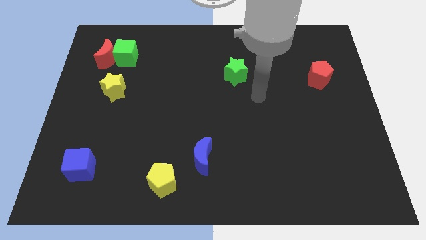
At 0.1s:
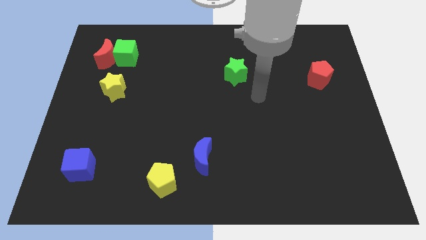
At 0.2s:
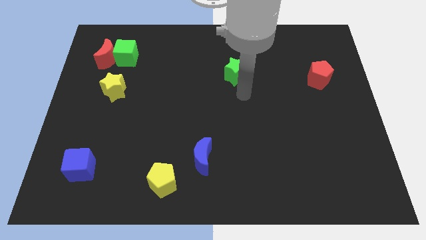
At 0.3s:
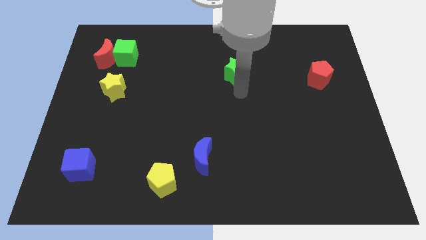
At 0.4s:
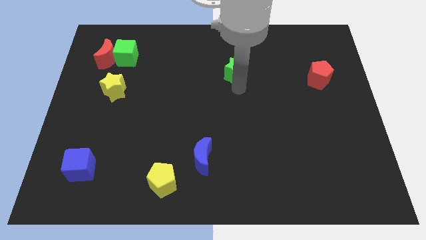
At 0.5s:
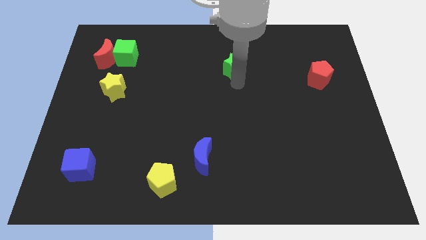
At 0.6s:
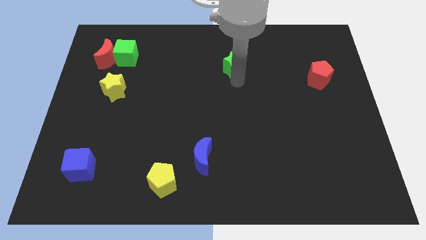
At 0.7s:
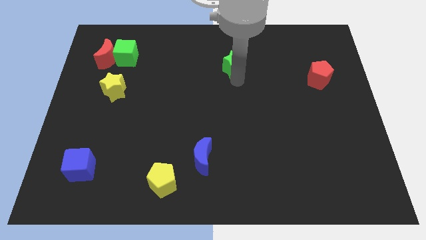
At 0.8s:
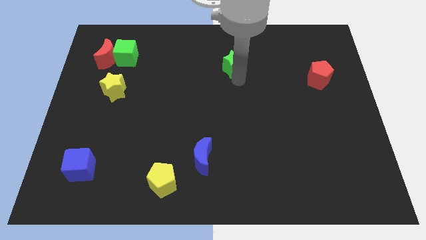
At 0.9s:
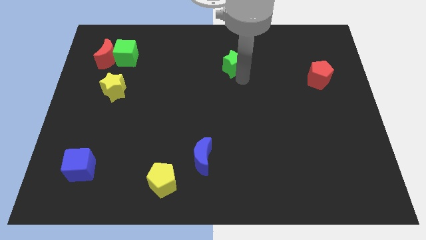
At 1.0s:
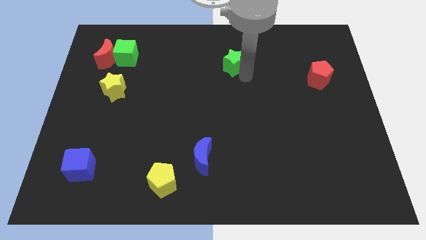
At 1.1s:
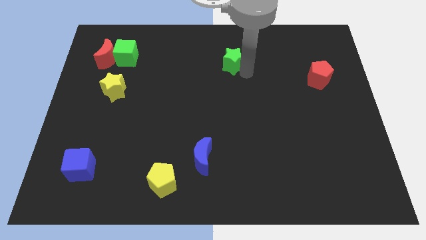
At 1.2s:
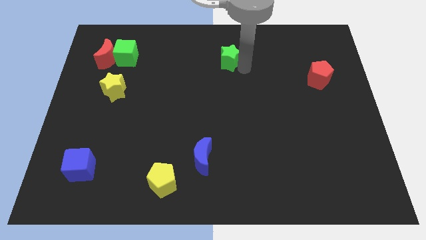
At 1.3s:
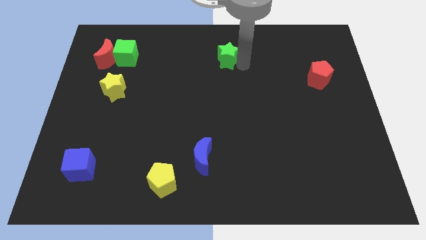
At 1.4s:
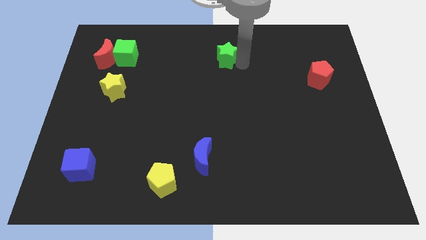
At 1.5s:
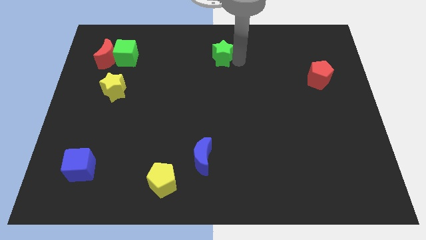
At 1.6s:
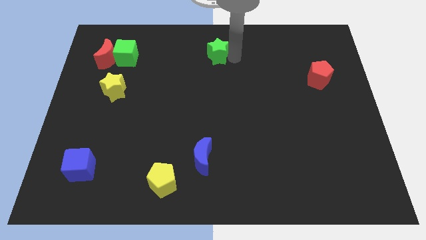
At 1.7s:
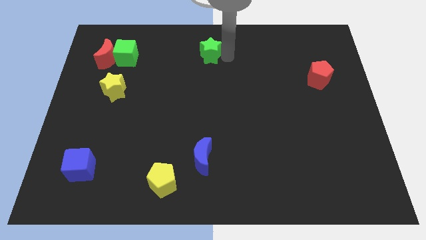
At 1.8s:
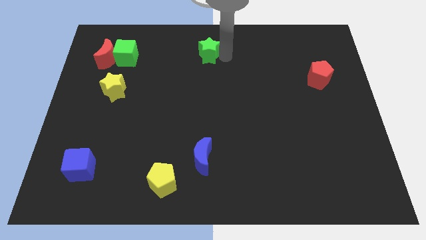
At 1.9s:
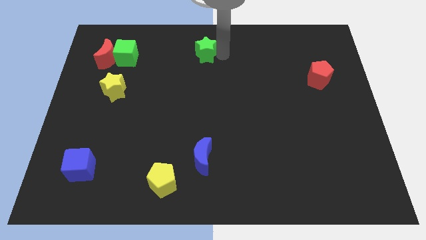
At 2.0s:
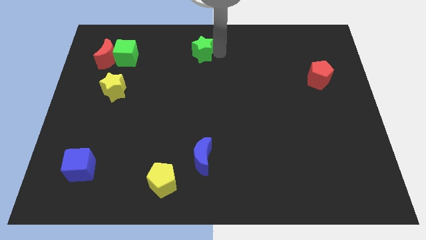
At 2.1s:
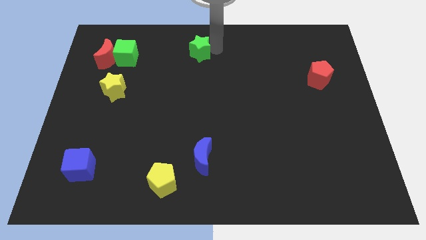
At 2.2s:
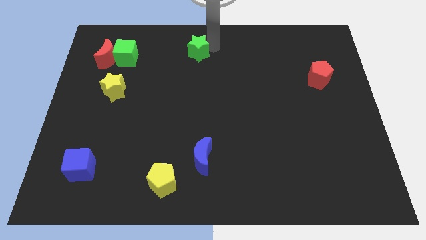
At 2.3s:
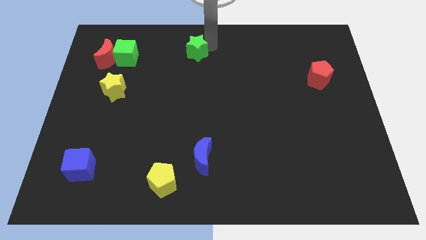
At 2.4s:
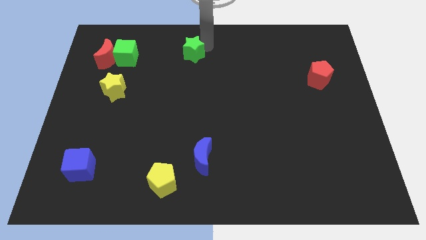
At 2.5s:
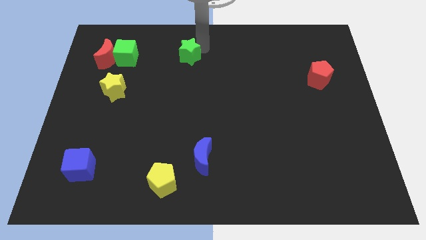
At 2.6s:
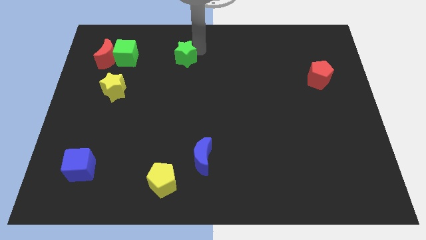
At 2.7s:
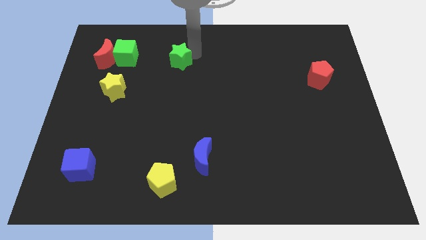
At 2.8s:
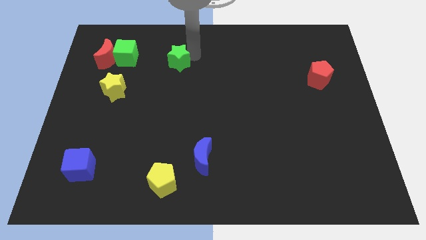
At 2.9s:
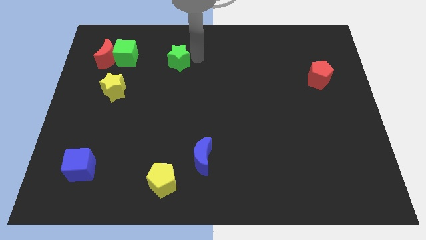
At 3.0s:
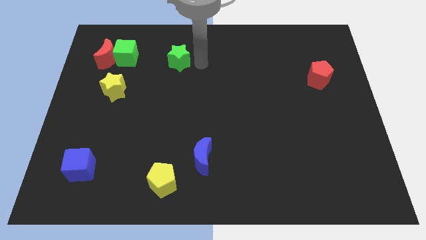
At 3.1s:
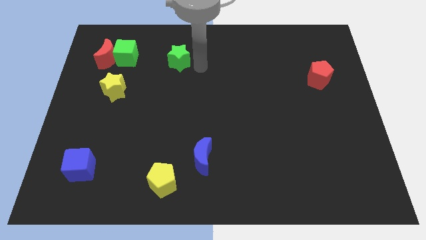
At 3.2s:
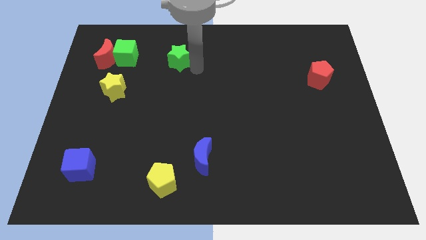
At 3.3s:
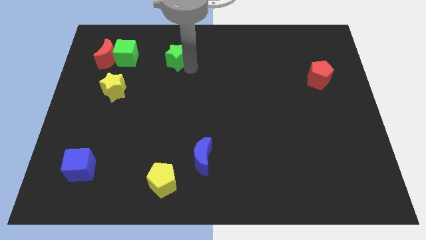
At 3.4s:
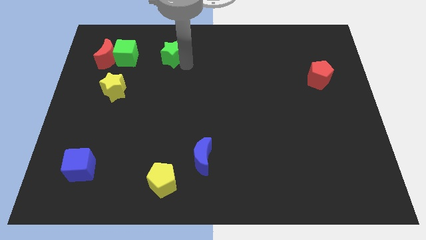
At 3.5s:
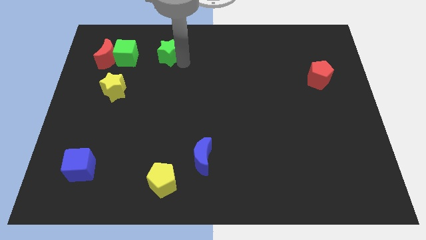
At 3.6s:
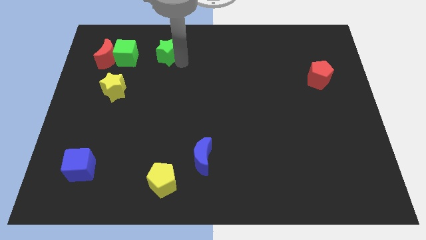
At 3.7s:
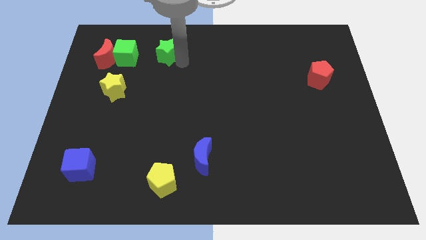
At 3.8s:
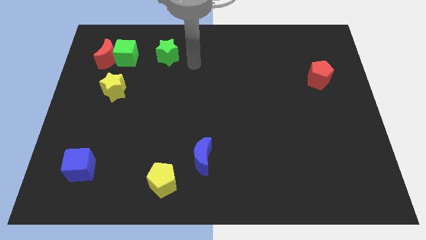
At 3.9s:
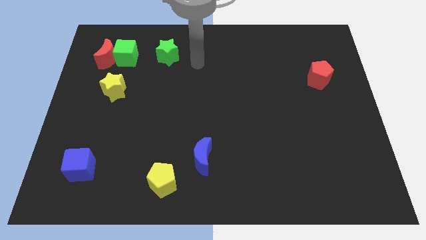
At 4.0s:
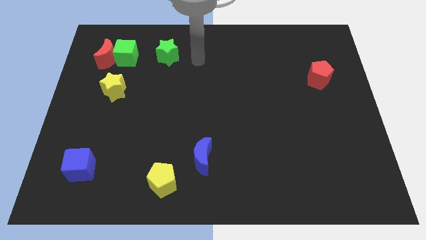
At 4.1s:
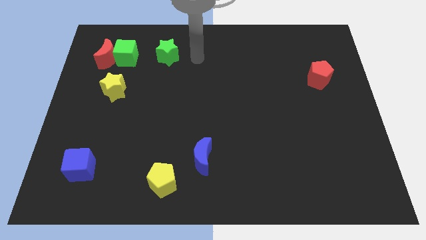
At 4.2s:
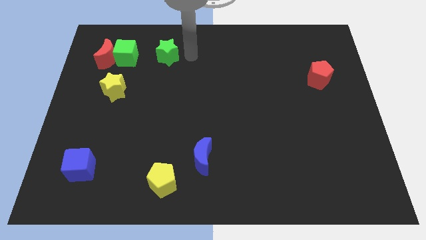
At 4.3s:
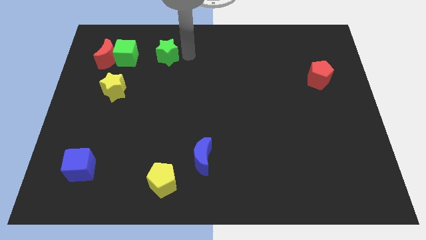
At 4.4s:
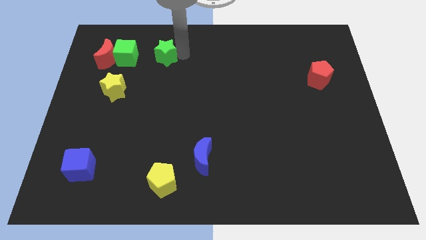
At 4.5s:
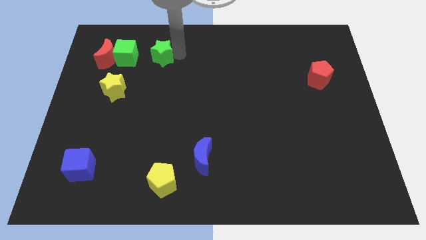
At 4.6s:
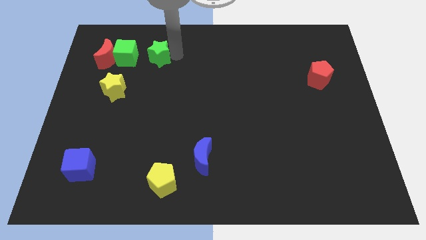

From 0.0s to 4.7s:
place the green star to the right side of the green cube

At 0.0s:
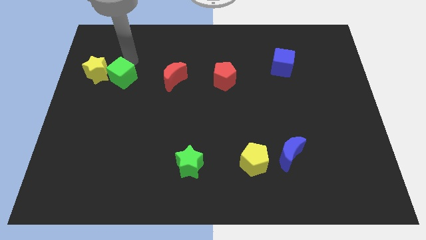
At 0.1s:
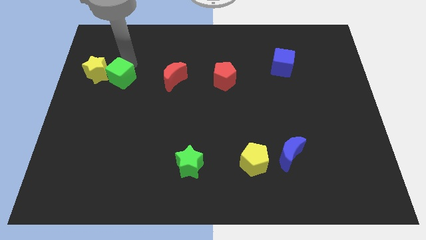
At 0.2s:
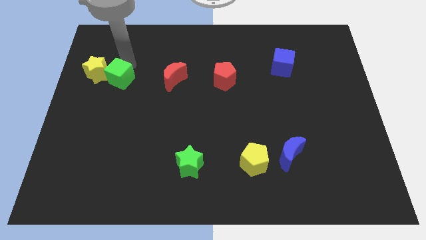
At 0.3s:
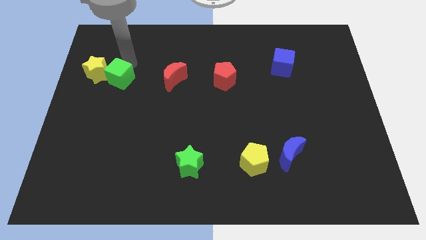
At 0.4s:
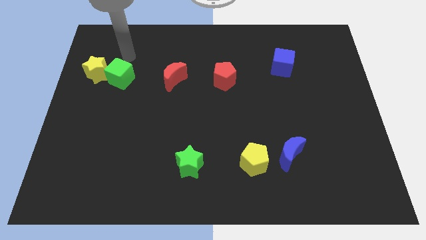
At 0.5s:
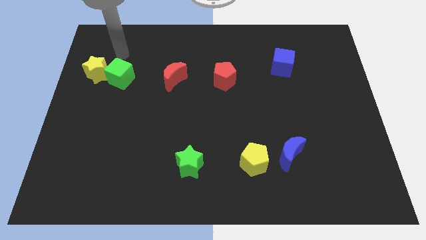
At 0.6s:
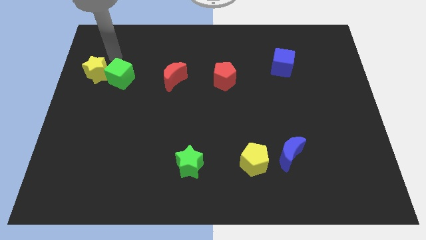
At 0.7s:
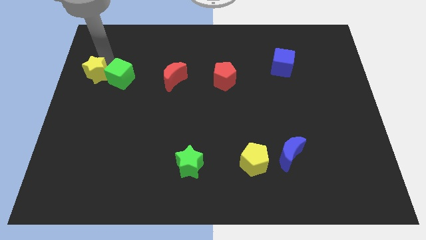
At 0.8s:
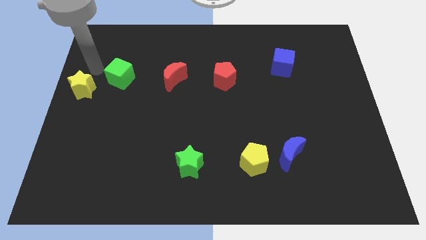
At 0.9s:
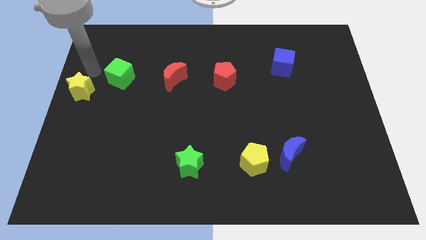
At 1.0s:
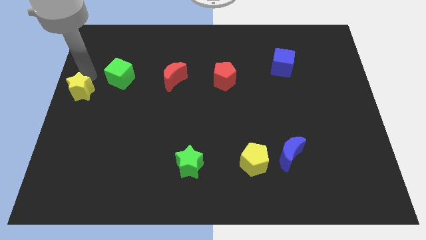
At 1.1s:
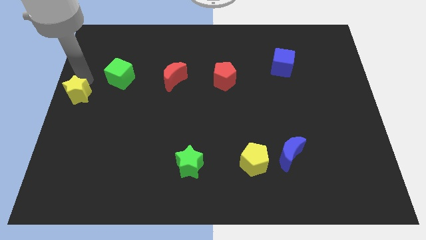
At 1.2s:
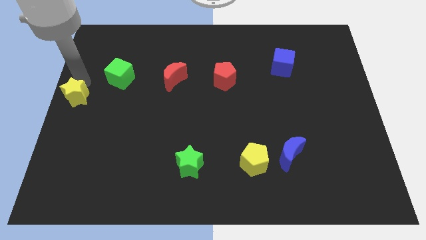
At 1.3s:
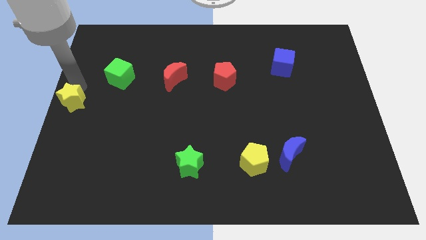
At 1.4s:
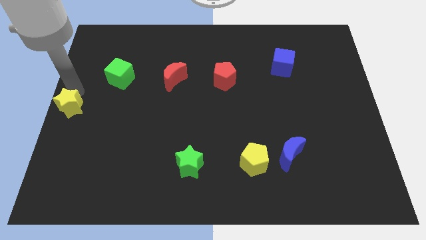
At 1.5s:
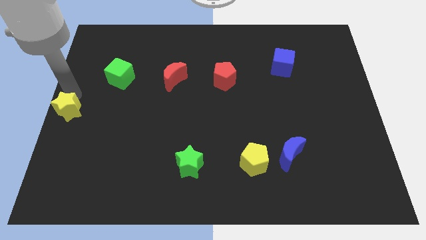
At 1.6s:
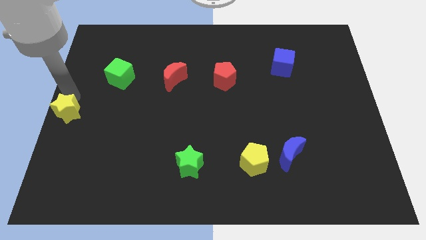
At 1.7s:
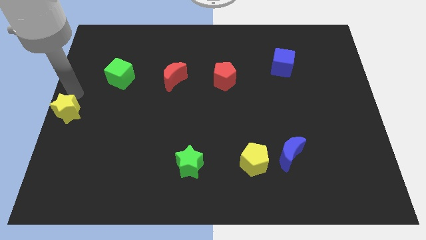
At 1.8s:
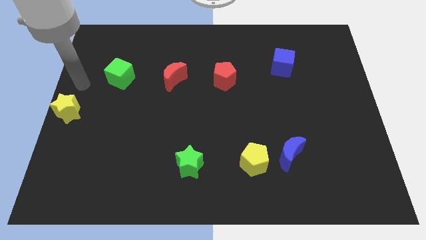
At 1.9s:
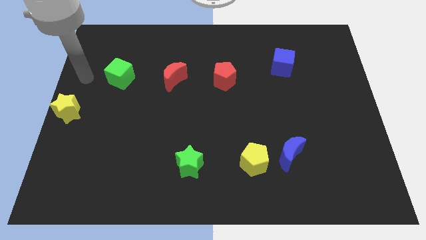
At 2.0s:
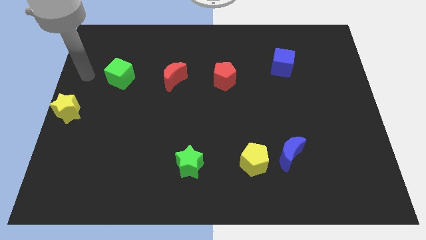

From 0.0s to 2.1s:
push the yellow star away from from green cube

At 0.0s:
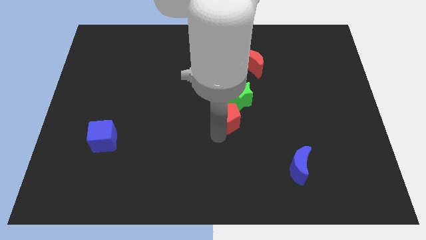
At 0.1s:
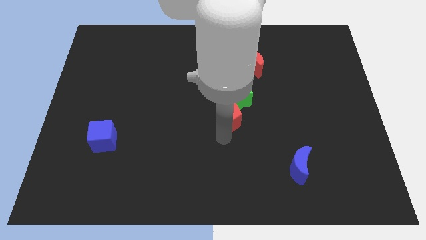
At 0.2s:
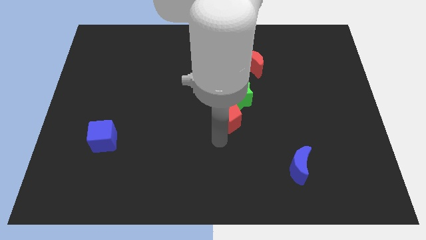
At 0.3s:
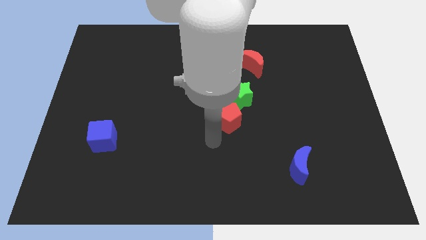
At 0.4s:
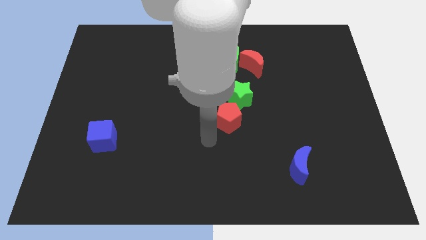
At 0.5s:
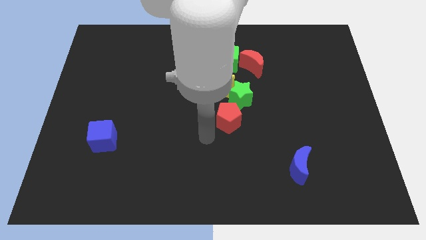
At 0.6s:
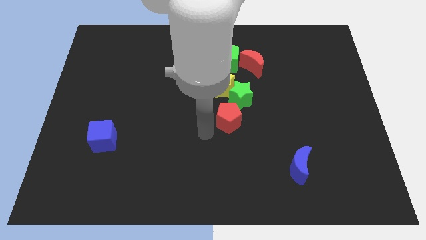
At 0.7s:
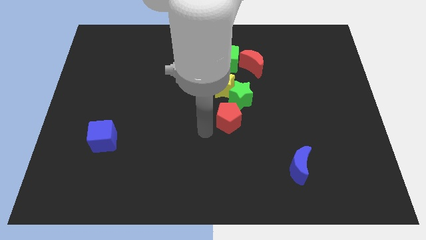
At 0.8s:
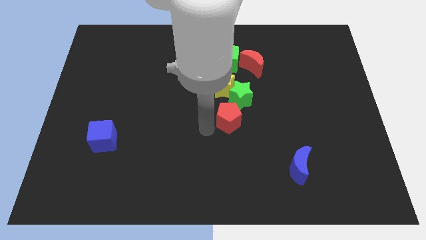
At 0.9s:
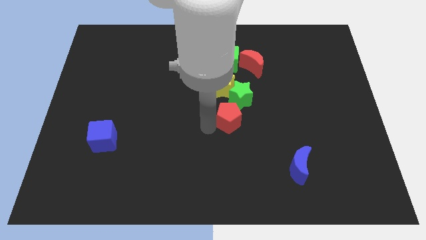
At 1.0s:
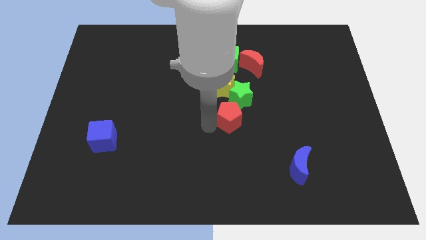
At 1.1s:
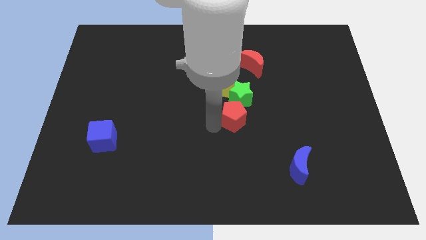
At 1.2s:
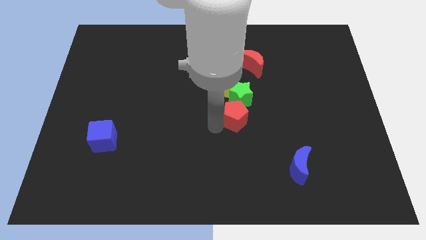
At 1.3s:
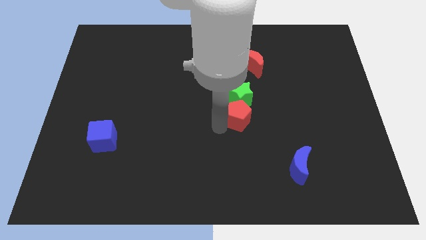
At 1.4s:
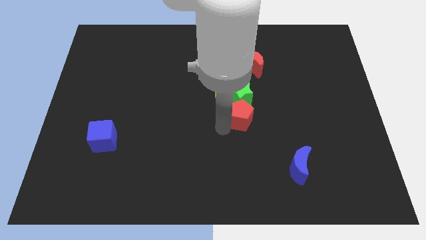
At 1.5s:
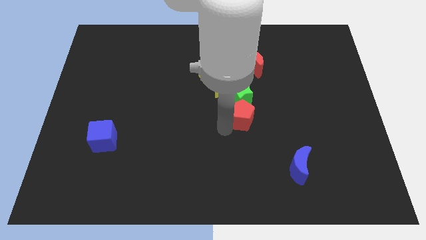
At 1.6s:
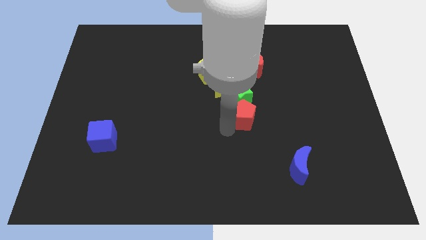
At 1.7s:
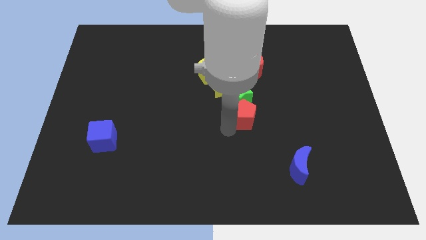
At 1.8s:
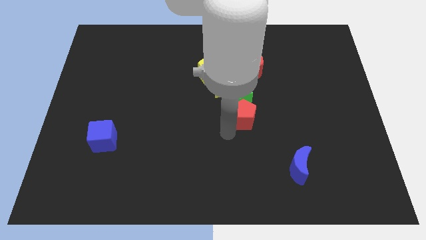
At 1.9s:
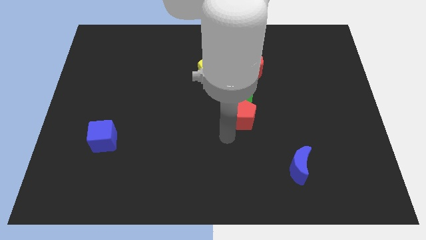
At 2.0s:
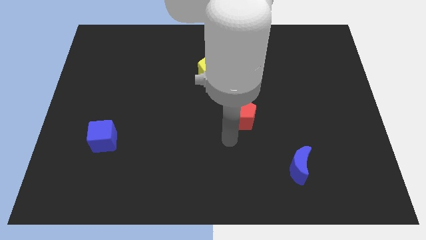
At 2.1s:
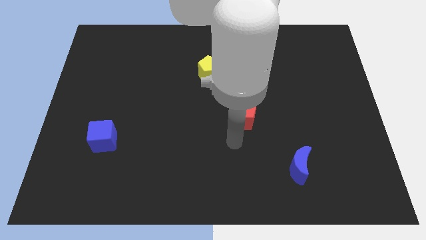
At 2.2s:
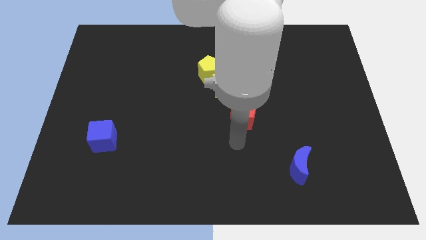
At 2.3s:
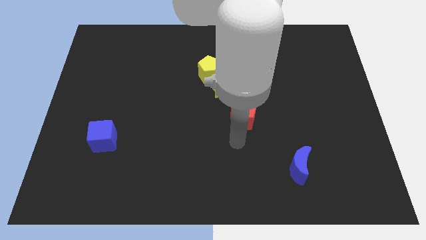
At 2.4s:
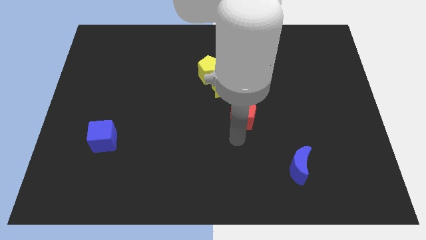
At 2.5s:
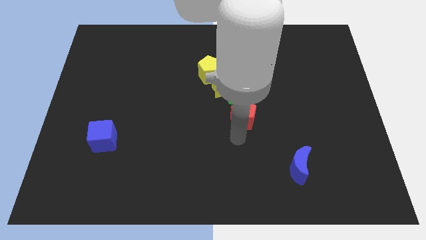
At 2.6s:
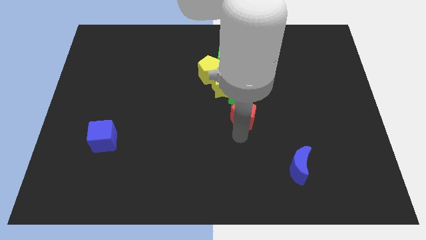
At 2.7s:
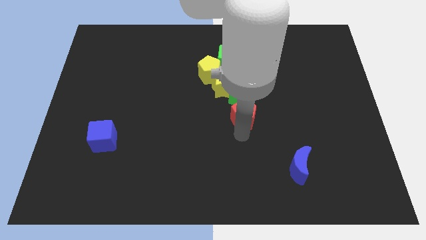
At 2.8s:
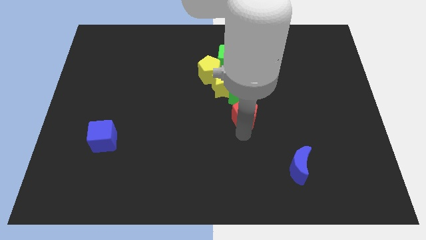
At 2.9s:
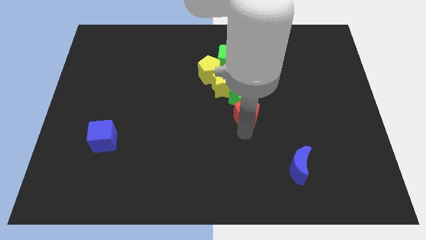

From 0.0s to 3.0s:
place red pentagon close to green star
